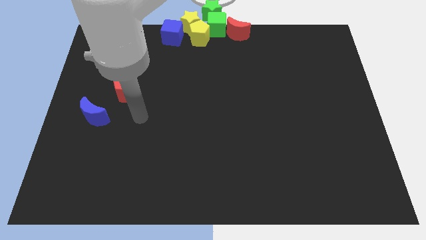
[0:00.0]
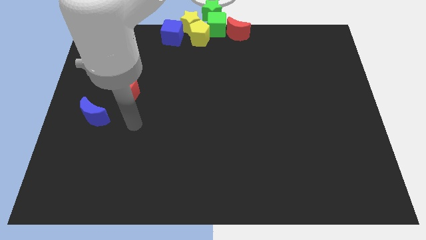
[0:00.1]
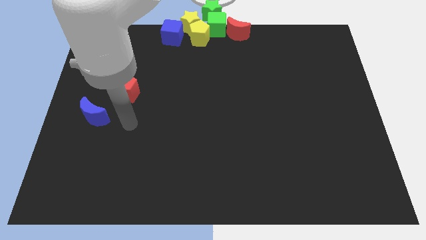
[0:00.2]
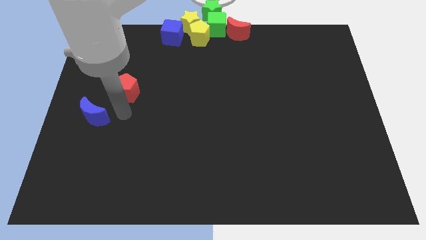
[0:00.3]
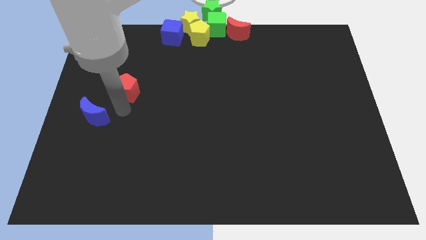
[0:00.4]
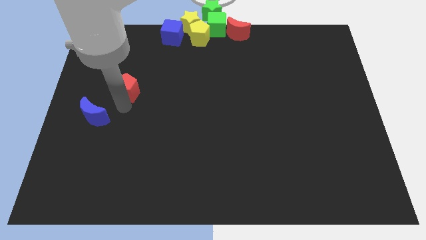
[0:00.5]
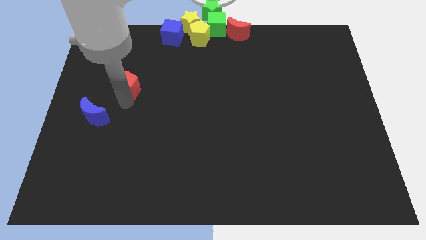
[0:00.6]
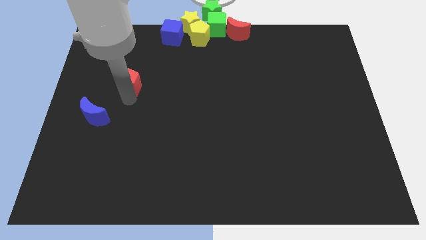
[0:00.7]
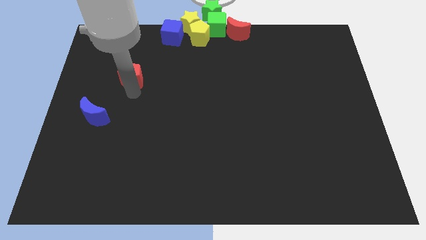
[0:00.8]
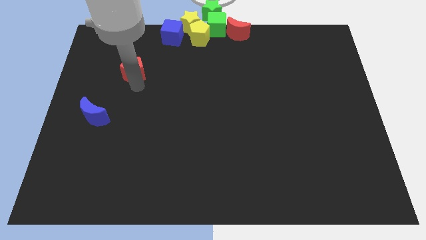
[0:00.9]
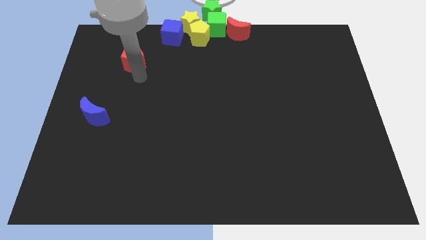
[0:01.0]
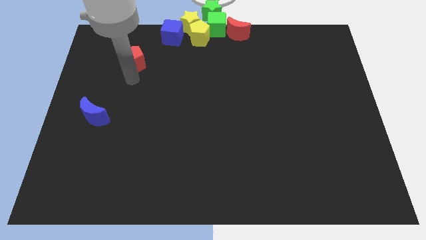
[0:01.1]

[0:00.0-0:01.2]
push red pentagon towards top of the board

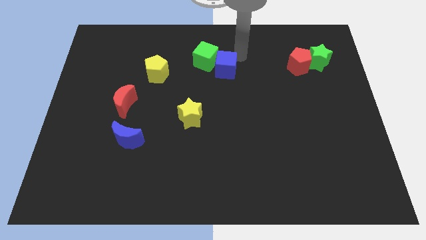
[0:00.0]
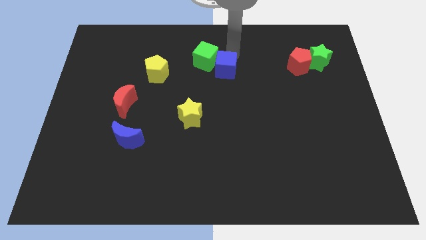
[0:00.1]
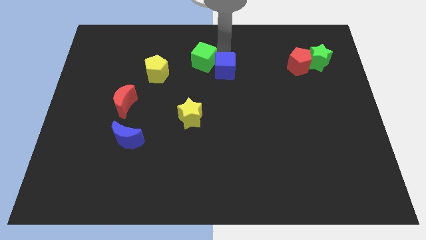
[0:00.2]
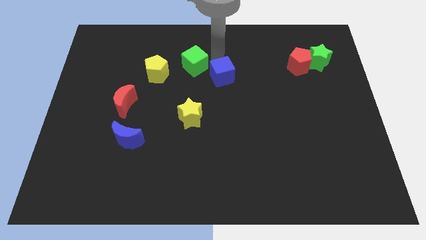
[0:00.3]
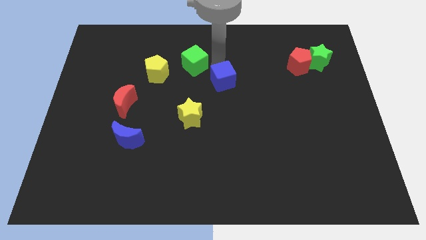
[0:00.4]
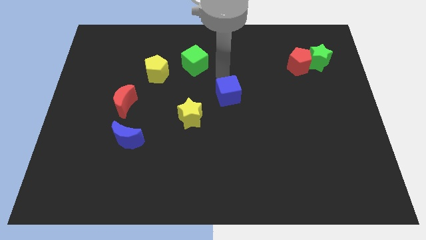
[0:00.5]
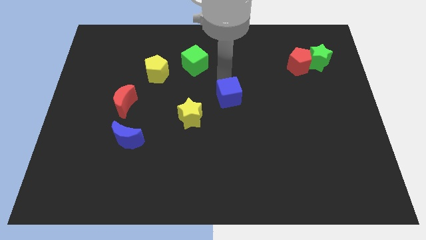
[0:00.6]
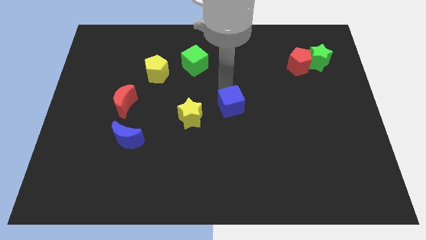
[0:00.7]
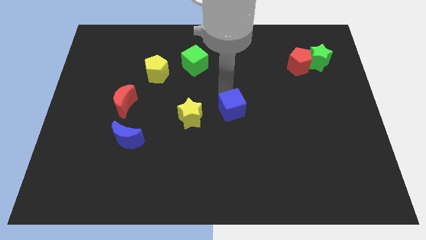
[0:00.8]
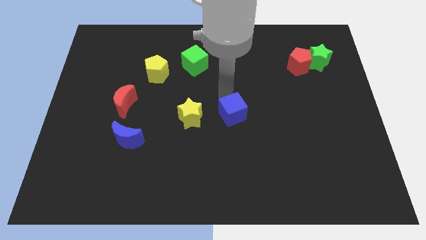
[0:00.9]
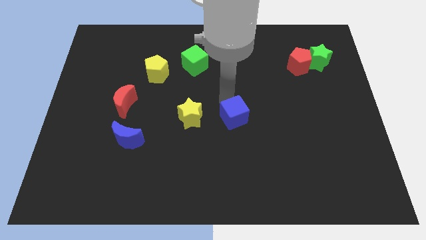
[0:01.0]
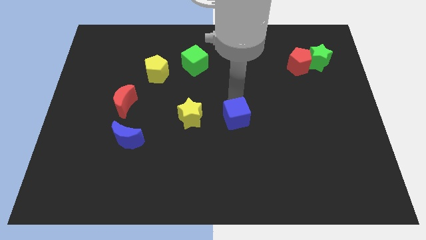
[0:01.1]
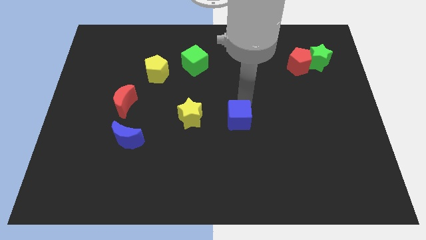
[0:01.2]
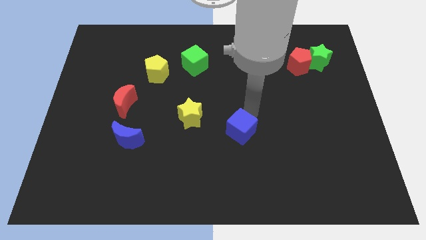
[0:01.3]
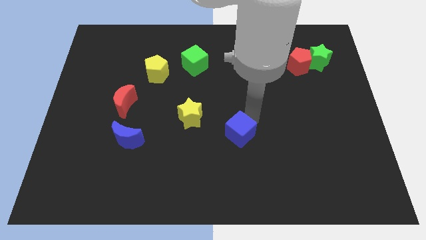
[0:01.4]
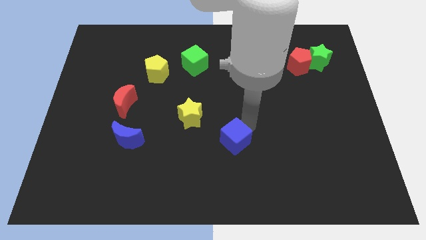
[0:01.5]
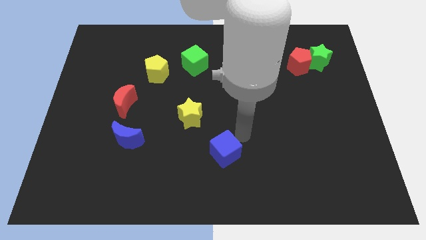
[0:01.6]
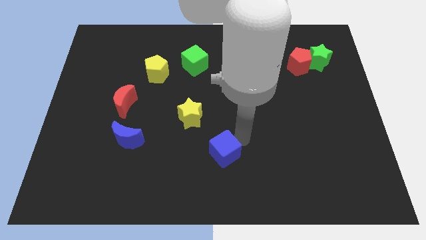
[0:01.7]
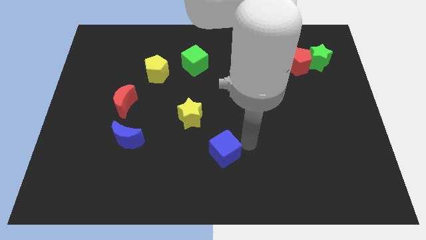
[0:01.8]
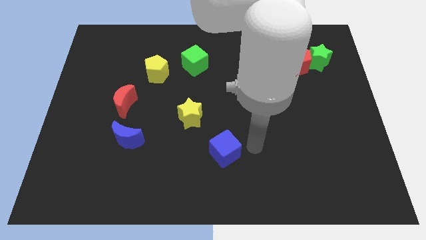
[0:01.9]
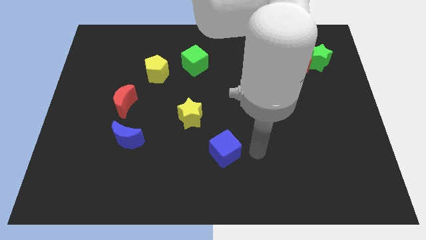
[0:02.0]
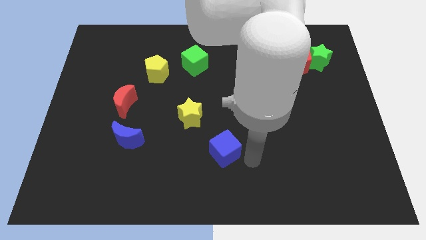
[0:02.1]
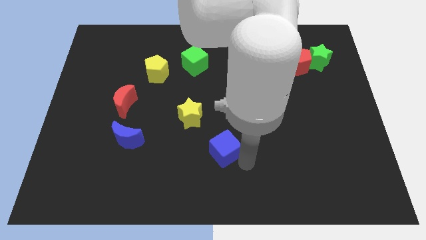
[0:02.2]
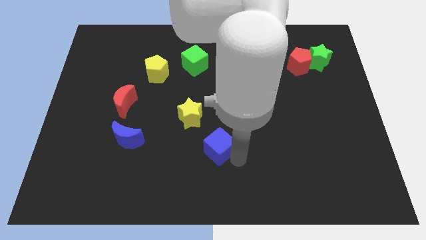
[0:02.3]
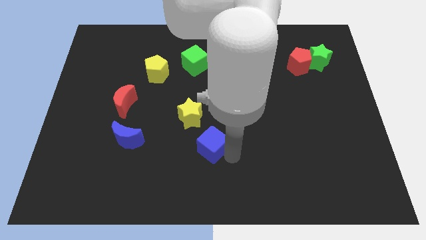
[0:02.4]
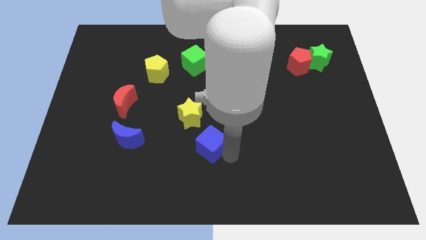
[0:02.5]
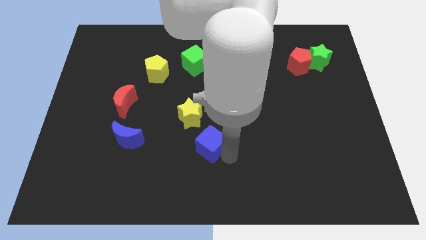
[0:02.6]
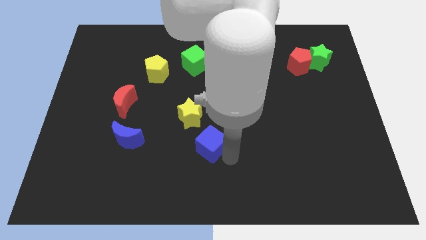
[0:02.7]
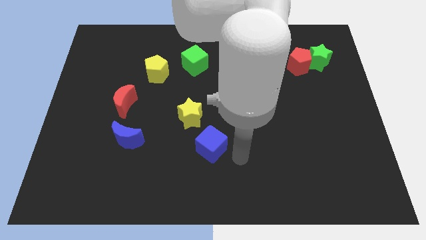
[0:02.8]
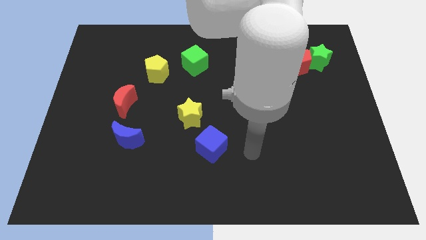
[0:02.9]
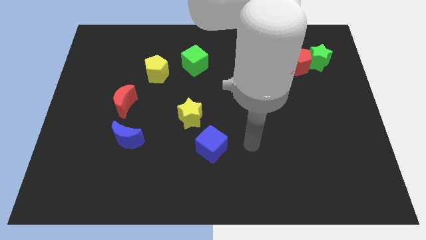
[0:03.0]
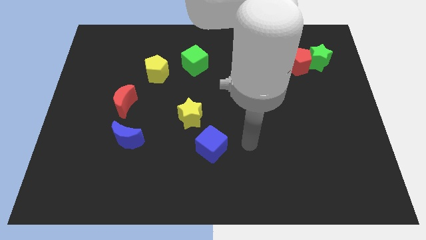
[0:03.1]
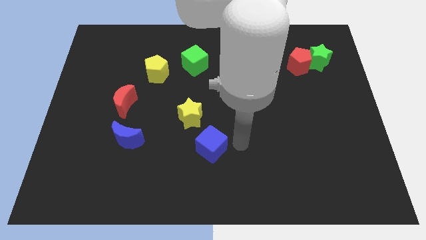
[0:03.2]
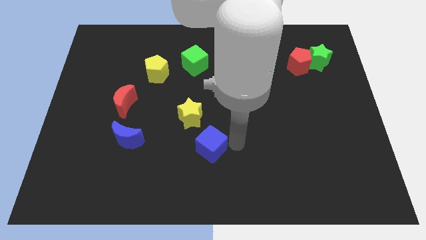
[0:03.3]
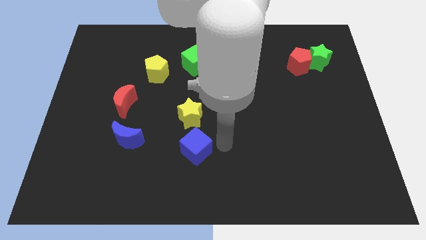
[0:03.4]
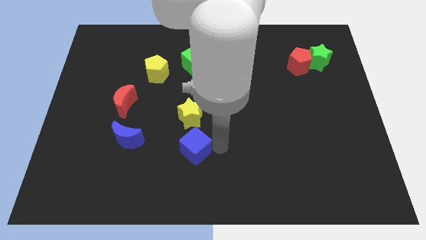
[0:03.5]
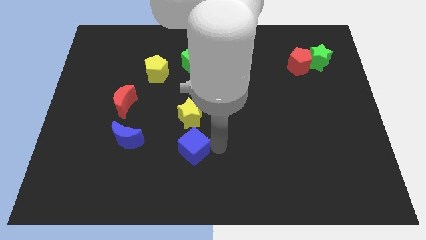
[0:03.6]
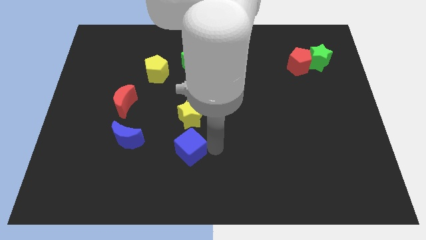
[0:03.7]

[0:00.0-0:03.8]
place the cube to the bottom side of the yellow star

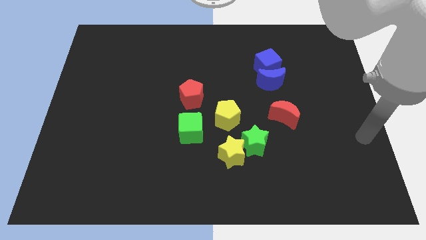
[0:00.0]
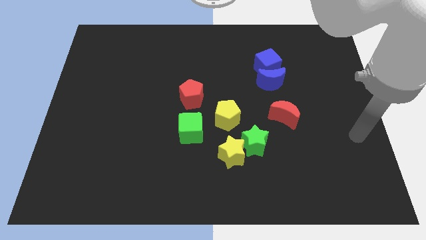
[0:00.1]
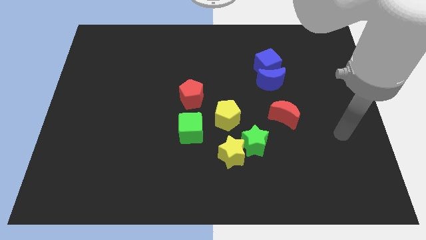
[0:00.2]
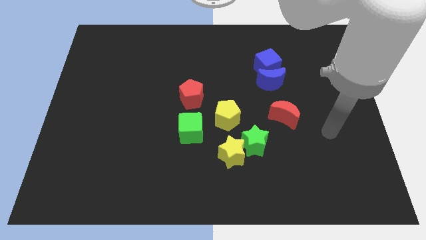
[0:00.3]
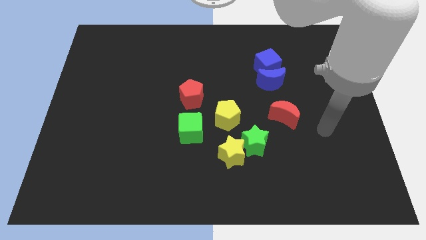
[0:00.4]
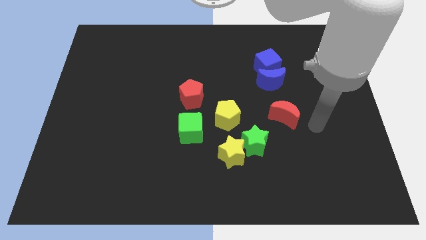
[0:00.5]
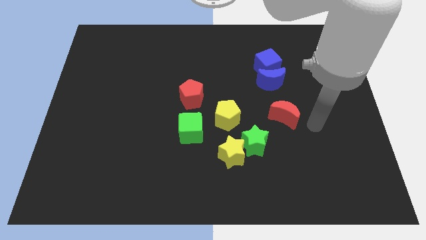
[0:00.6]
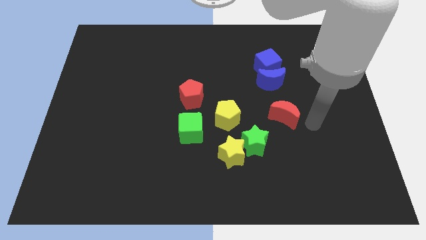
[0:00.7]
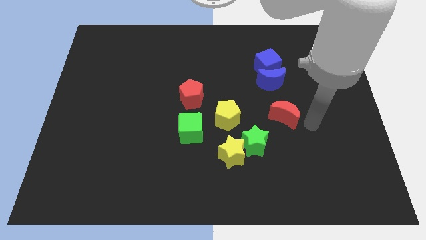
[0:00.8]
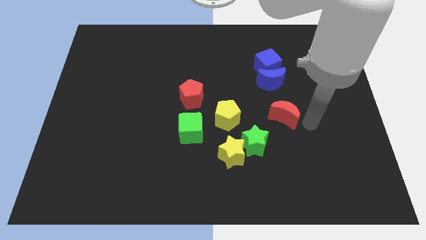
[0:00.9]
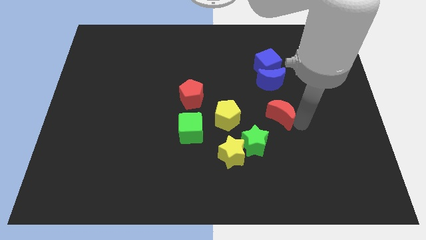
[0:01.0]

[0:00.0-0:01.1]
touch the bottom of red moon

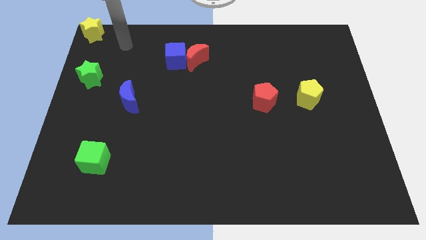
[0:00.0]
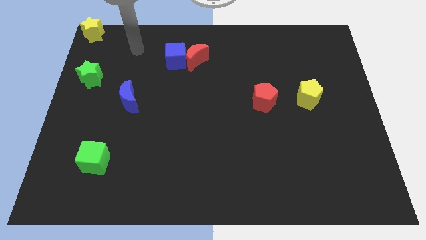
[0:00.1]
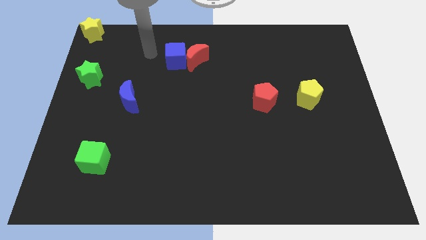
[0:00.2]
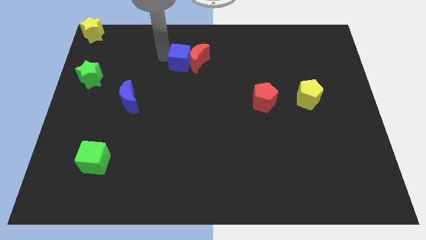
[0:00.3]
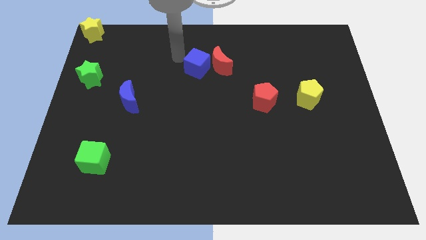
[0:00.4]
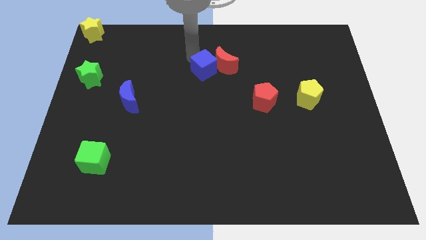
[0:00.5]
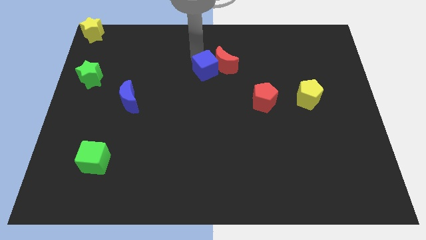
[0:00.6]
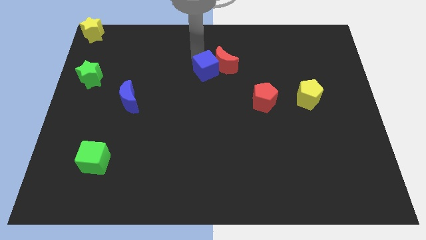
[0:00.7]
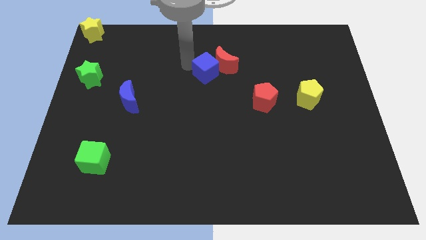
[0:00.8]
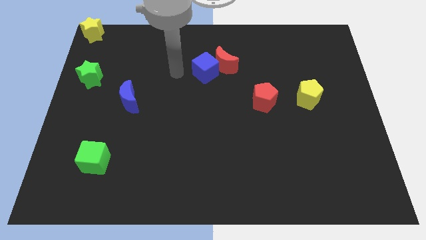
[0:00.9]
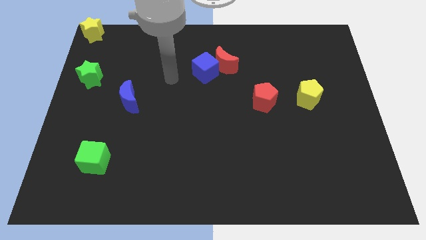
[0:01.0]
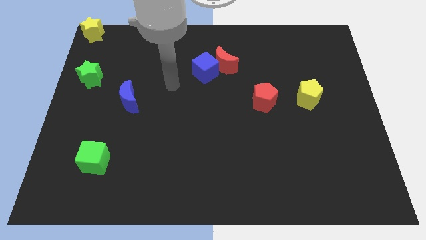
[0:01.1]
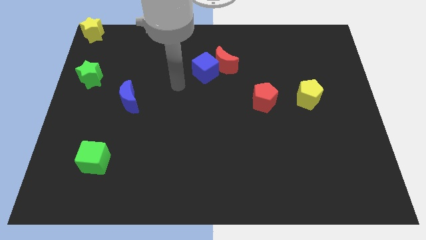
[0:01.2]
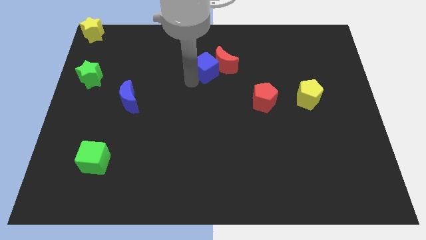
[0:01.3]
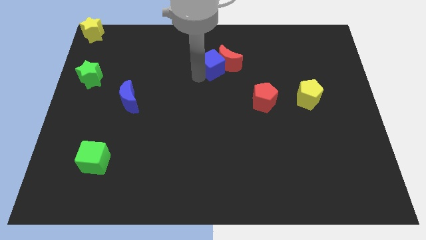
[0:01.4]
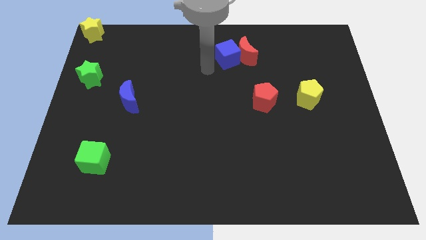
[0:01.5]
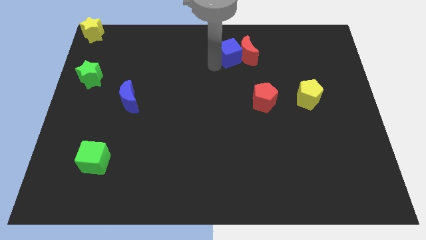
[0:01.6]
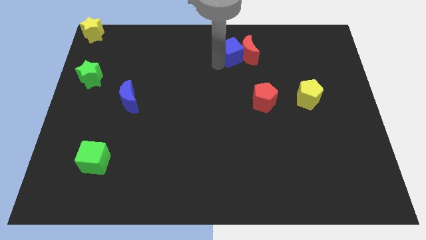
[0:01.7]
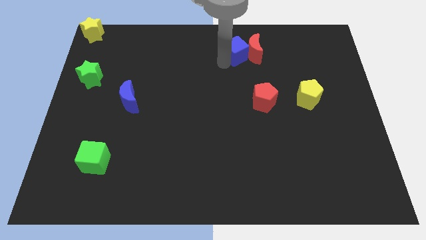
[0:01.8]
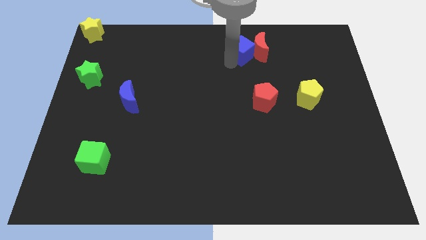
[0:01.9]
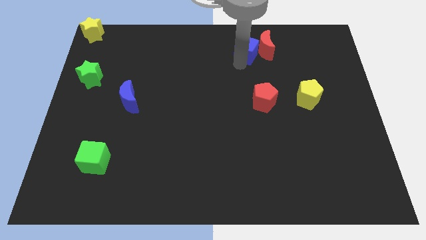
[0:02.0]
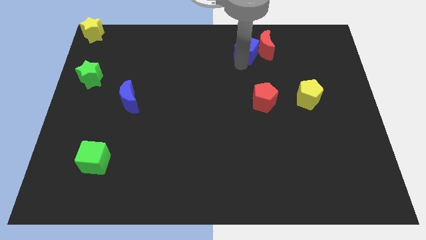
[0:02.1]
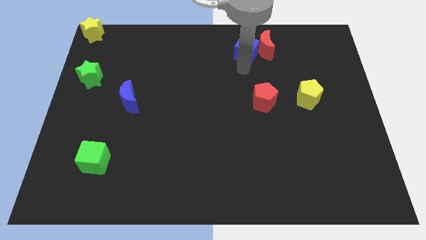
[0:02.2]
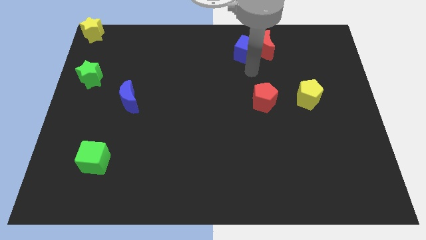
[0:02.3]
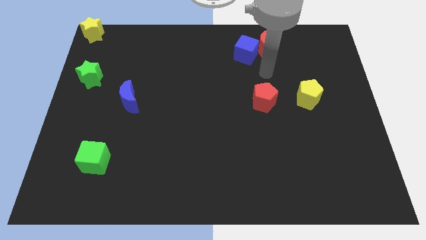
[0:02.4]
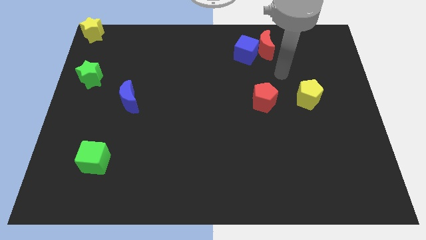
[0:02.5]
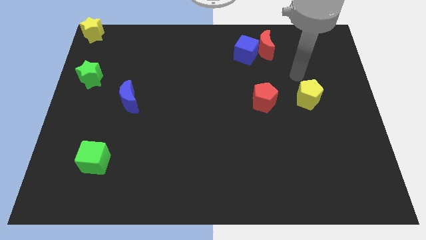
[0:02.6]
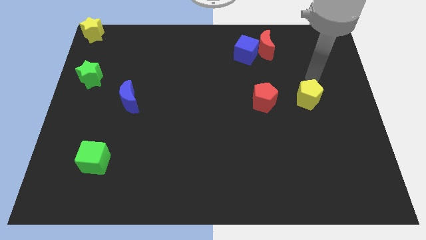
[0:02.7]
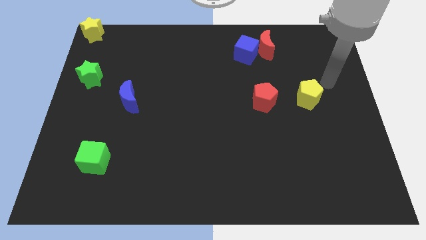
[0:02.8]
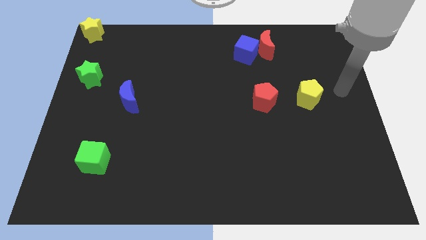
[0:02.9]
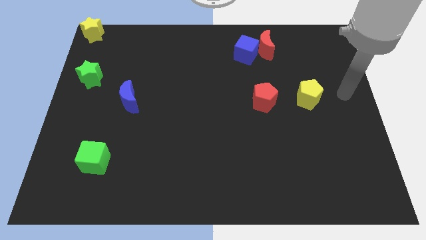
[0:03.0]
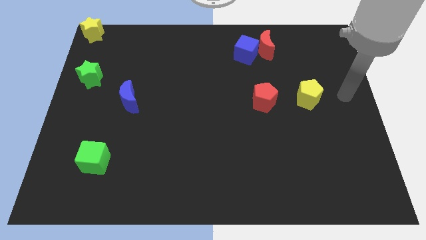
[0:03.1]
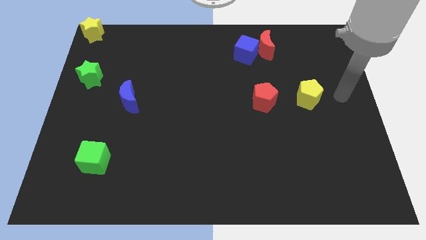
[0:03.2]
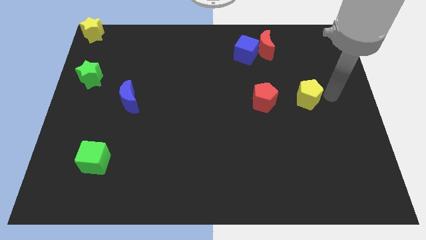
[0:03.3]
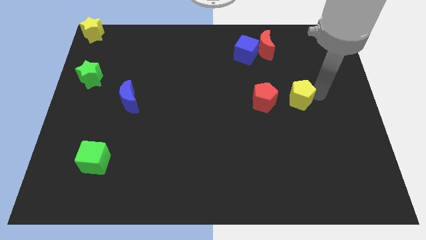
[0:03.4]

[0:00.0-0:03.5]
move the blue cube and red crescent towards the right
